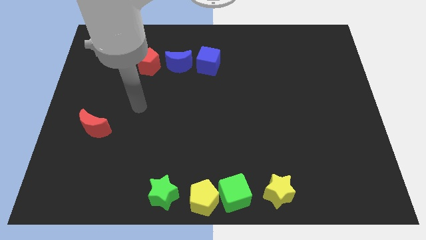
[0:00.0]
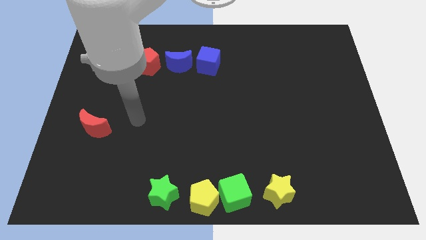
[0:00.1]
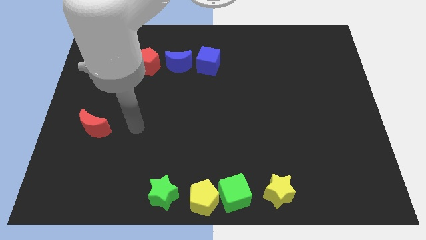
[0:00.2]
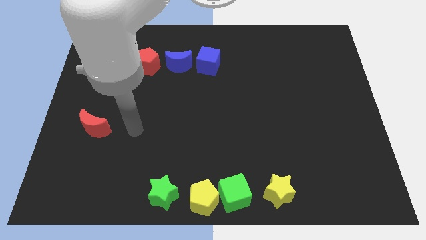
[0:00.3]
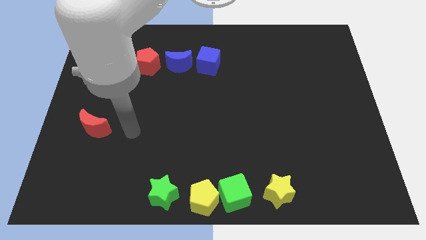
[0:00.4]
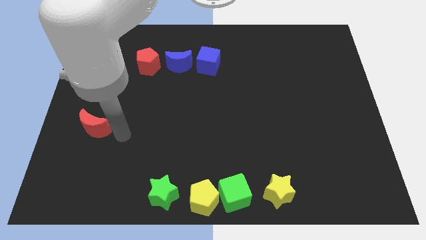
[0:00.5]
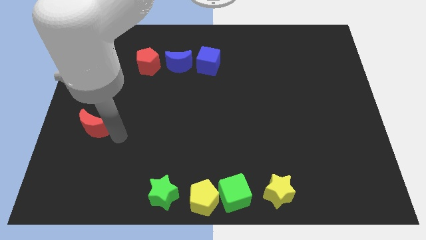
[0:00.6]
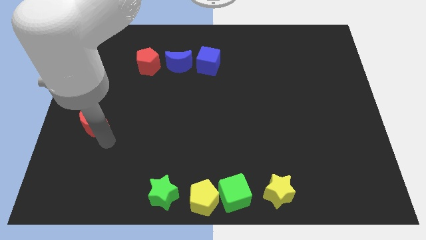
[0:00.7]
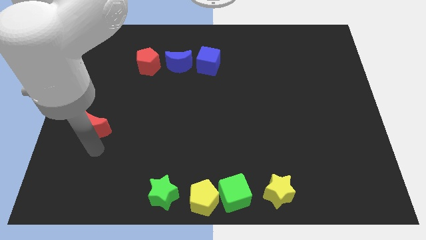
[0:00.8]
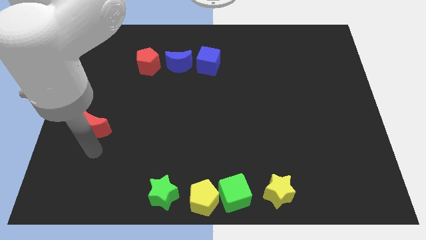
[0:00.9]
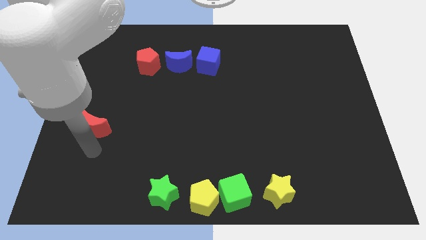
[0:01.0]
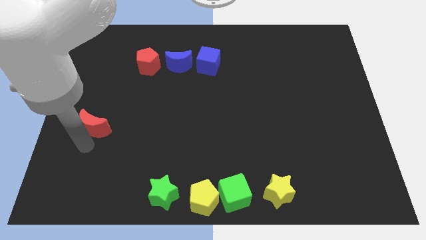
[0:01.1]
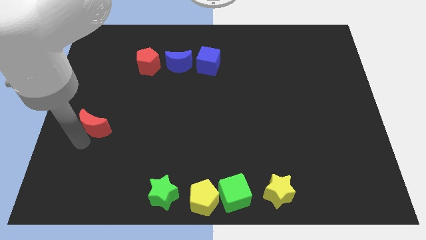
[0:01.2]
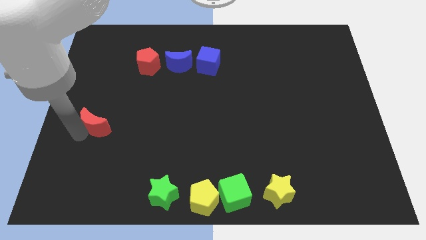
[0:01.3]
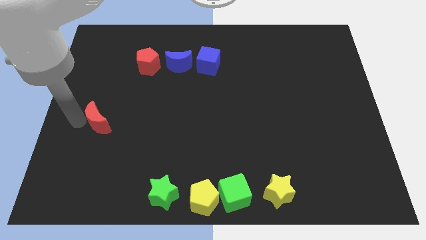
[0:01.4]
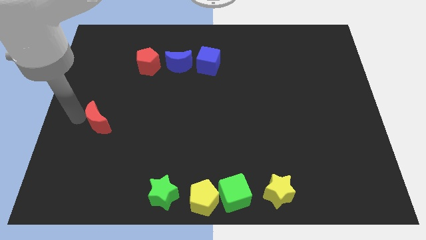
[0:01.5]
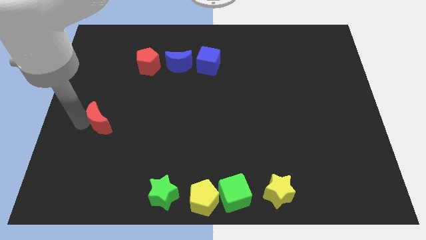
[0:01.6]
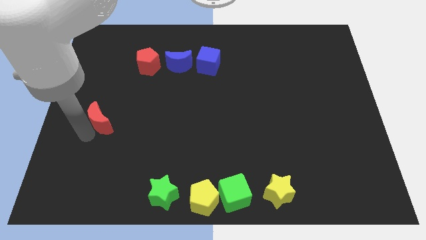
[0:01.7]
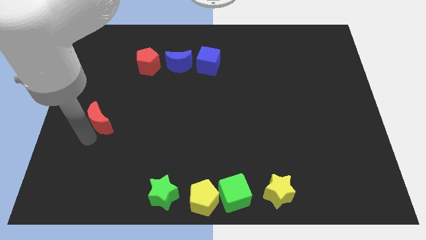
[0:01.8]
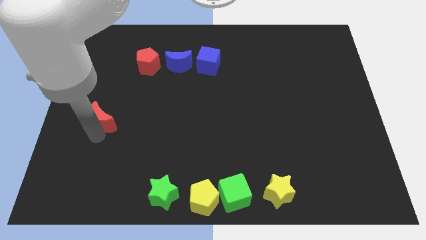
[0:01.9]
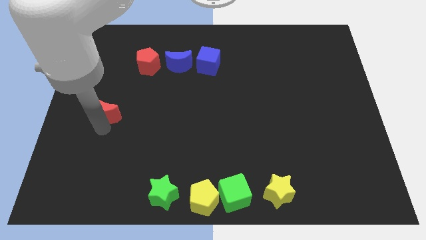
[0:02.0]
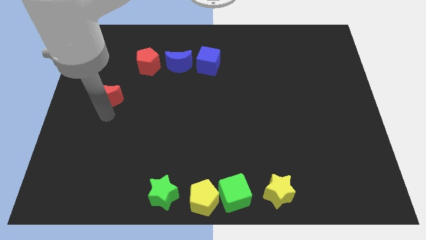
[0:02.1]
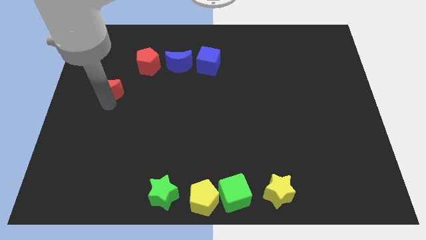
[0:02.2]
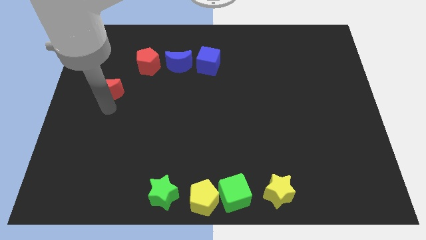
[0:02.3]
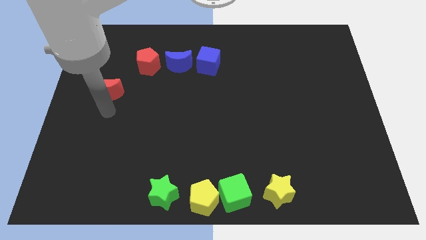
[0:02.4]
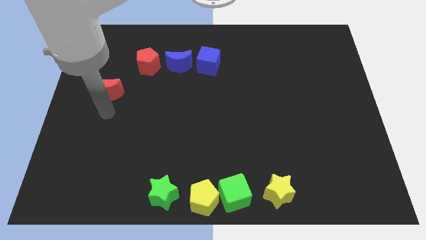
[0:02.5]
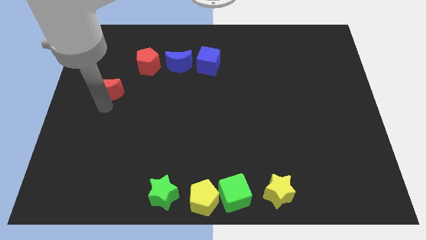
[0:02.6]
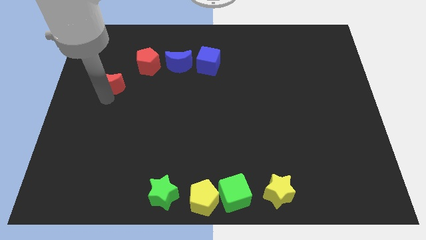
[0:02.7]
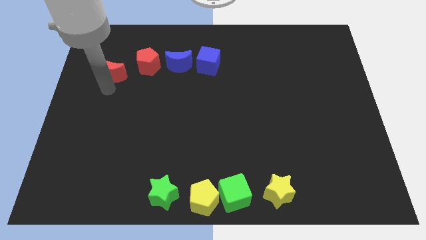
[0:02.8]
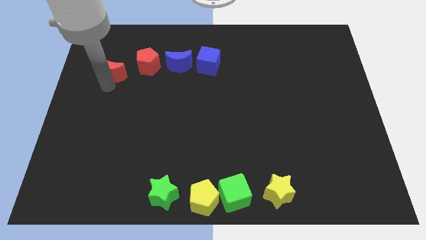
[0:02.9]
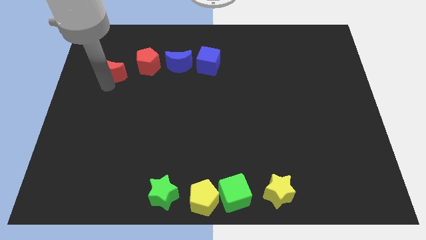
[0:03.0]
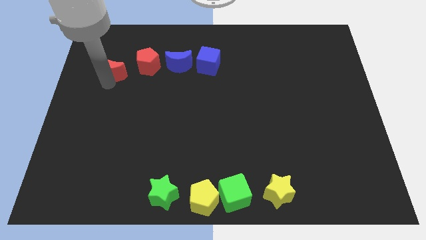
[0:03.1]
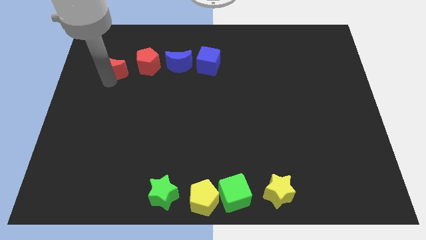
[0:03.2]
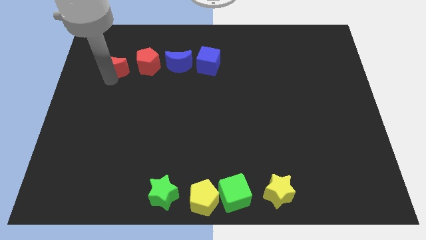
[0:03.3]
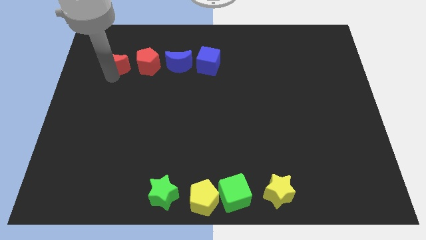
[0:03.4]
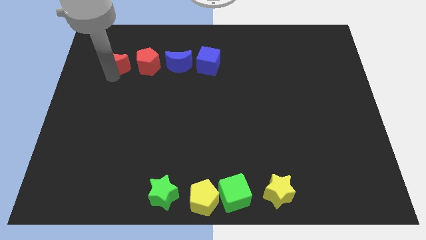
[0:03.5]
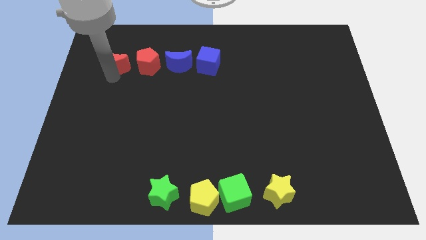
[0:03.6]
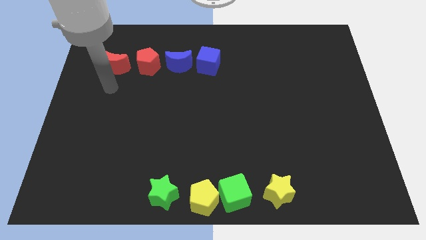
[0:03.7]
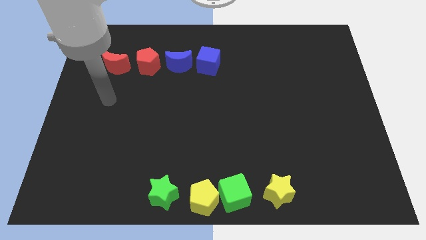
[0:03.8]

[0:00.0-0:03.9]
push the red crescent left to the red pentagon

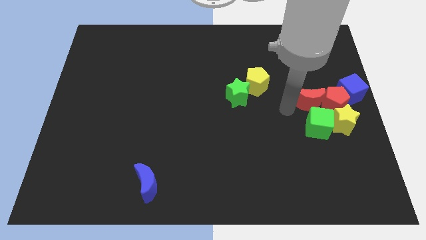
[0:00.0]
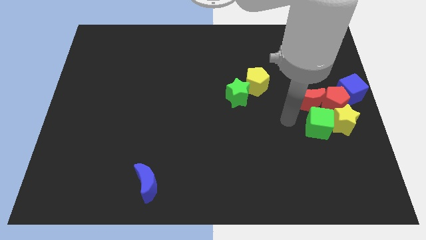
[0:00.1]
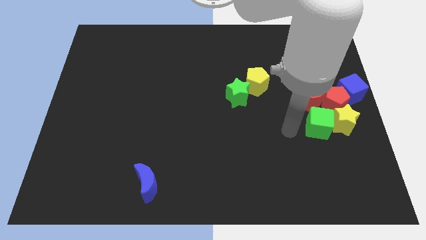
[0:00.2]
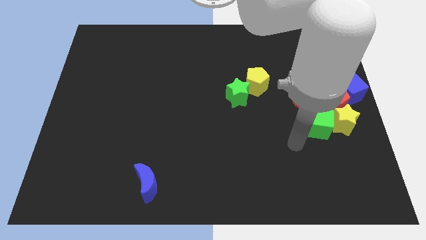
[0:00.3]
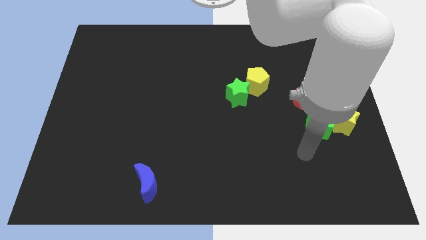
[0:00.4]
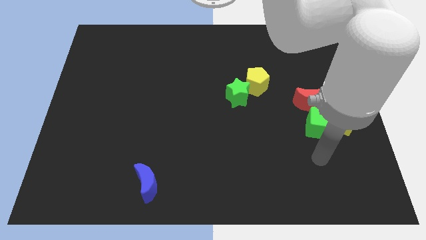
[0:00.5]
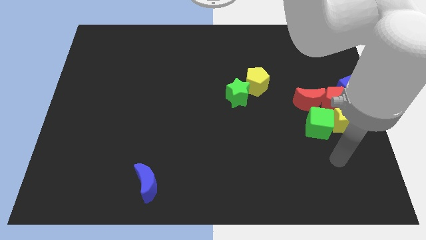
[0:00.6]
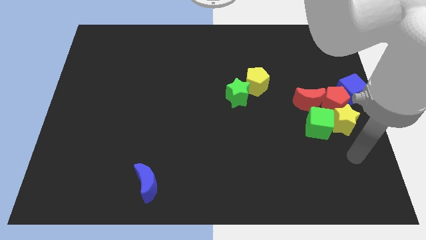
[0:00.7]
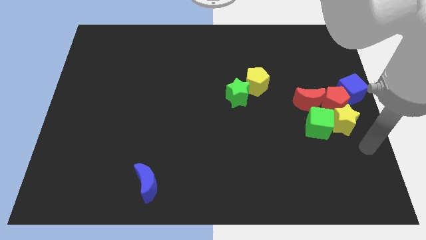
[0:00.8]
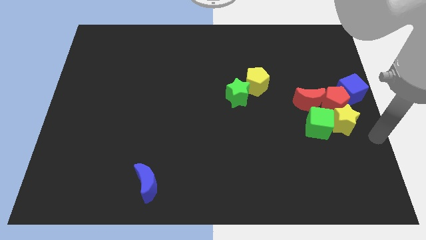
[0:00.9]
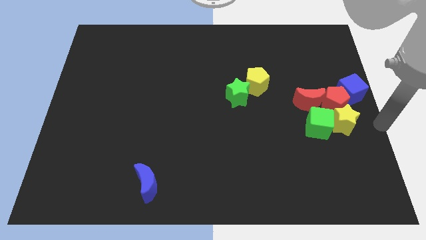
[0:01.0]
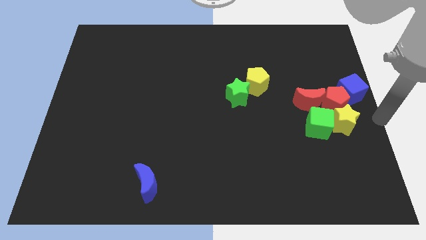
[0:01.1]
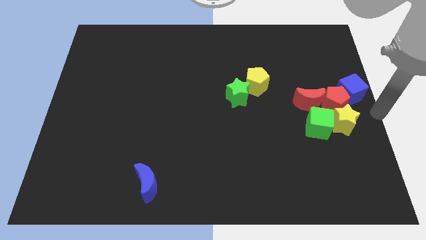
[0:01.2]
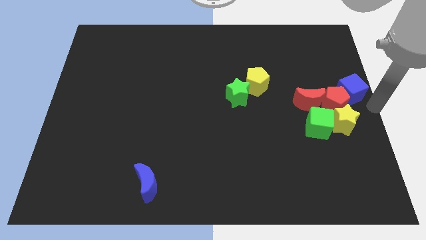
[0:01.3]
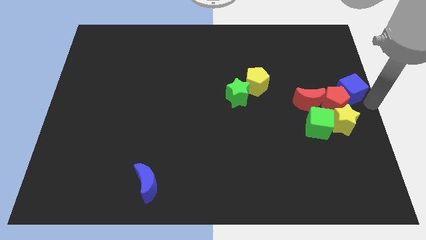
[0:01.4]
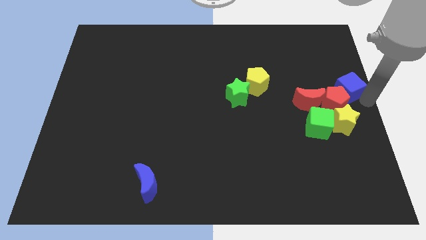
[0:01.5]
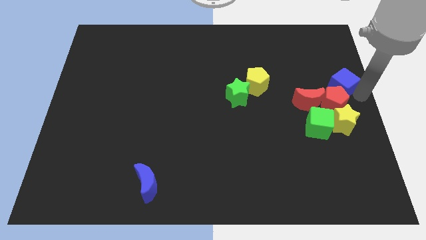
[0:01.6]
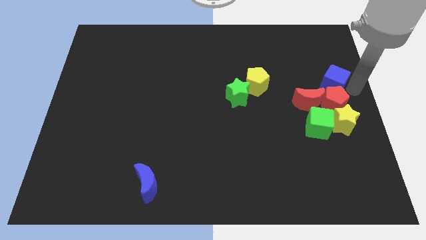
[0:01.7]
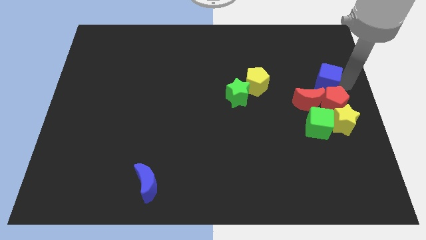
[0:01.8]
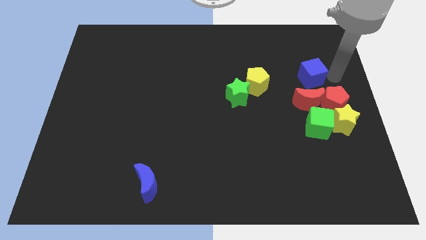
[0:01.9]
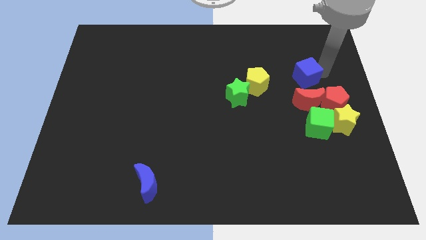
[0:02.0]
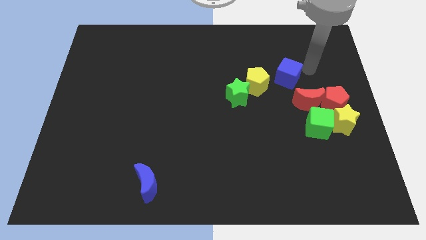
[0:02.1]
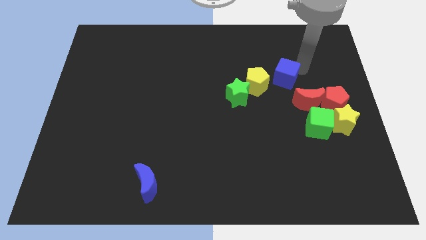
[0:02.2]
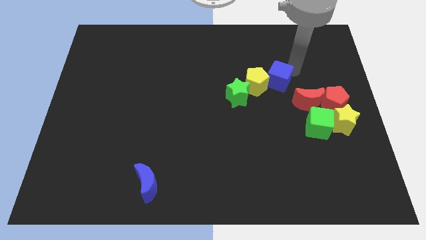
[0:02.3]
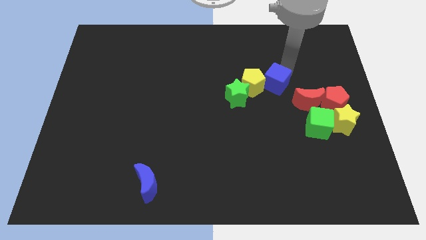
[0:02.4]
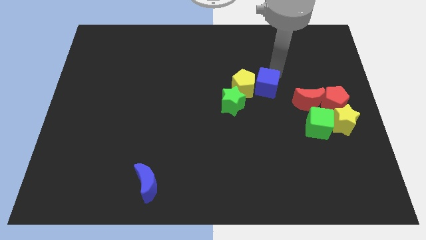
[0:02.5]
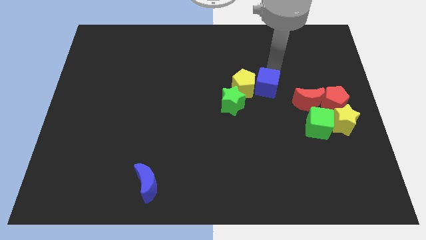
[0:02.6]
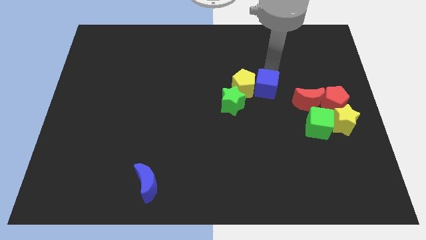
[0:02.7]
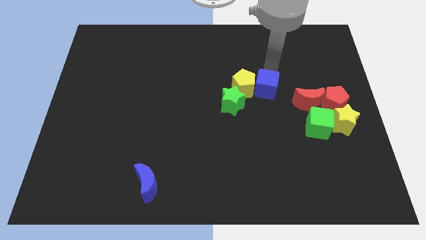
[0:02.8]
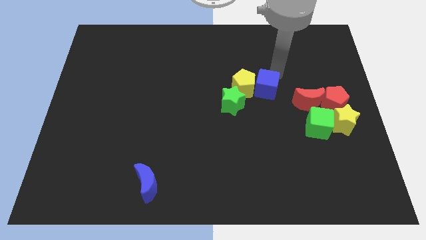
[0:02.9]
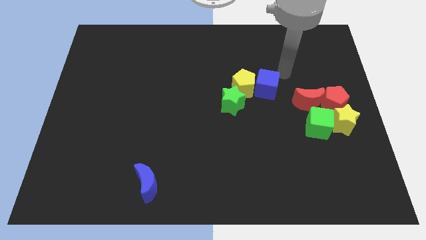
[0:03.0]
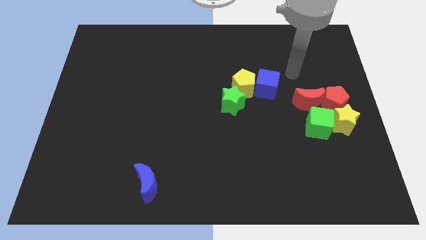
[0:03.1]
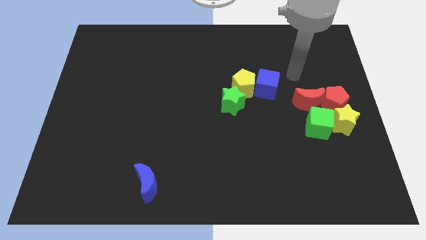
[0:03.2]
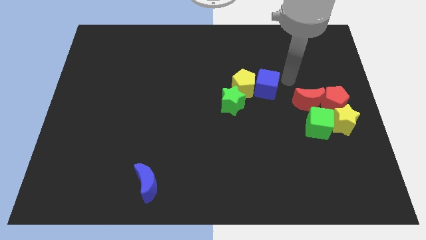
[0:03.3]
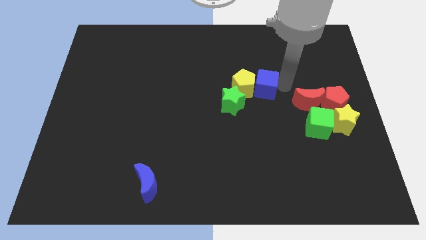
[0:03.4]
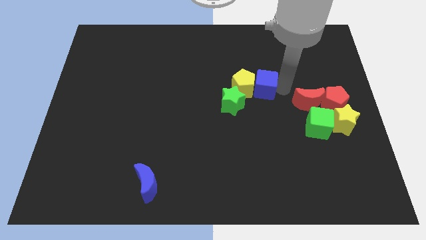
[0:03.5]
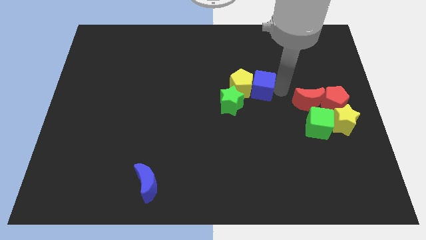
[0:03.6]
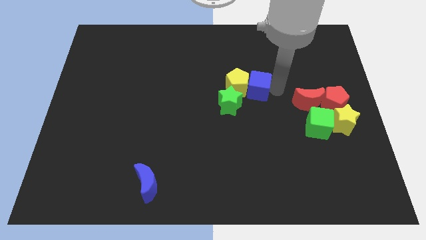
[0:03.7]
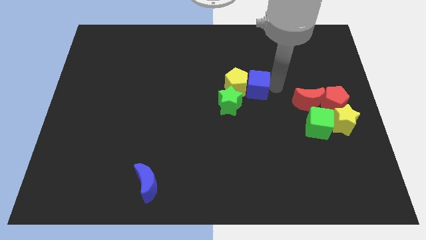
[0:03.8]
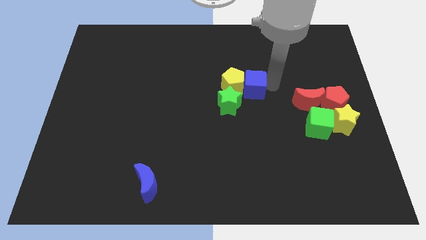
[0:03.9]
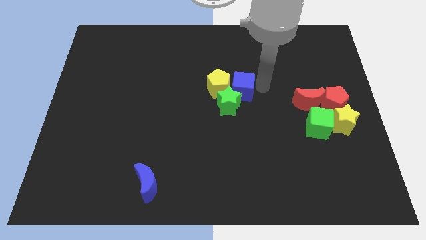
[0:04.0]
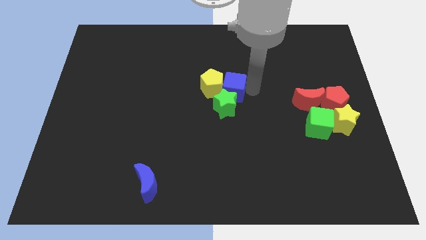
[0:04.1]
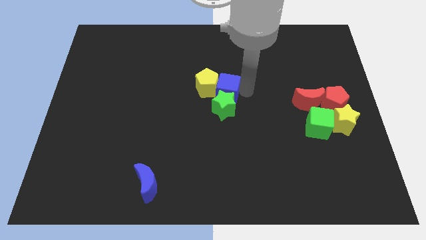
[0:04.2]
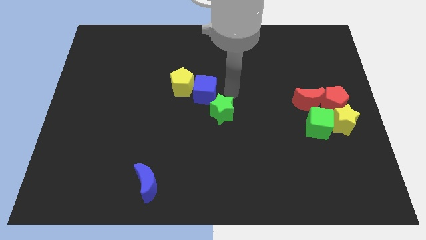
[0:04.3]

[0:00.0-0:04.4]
move the blue cube to the right of the yellow pentagon

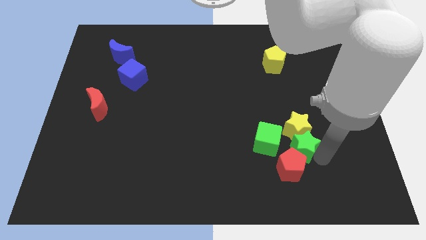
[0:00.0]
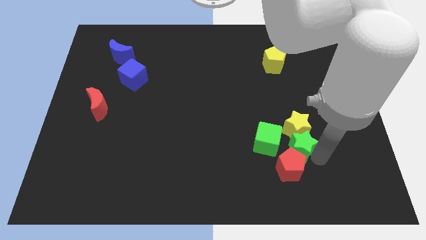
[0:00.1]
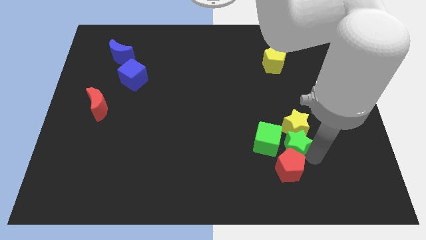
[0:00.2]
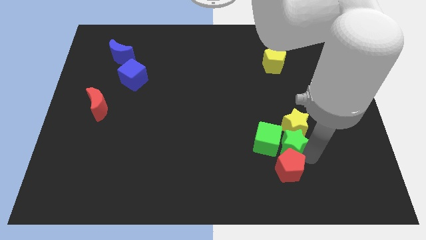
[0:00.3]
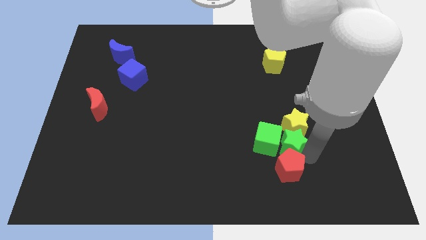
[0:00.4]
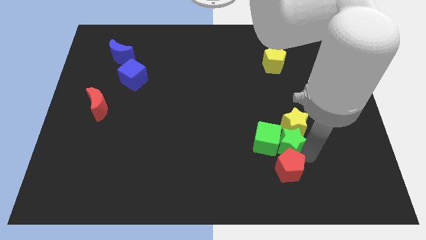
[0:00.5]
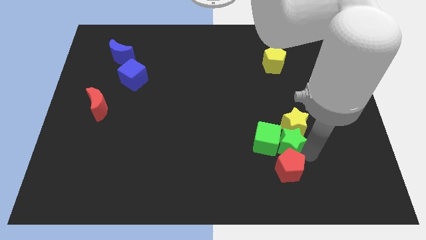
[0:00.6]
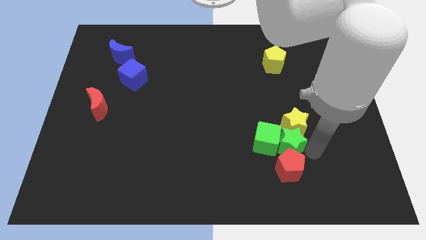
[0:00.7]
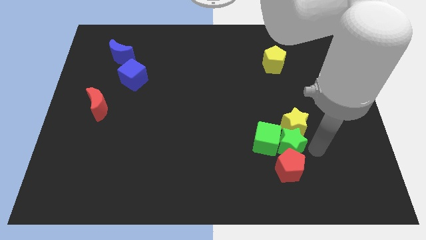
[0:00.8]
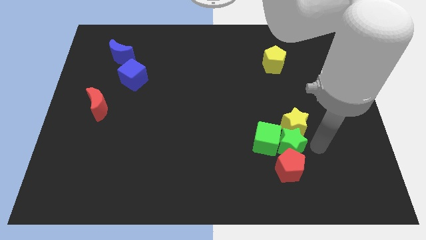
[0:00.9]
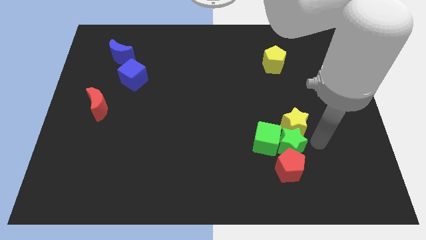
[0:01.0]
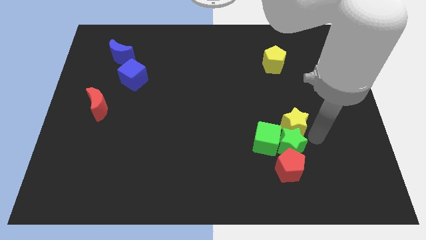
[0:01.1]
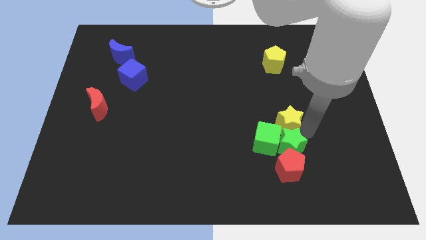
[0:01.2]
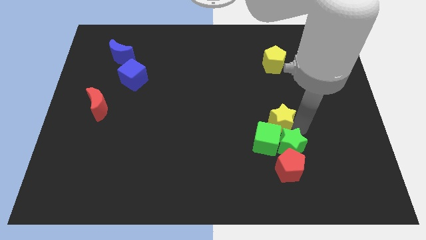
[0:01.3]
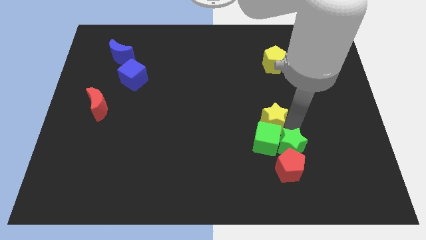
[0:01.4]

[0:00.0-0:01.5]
push green star into the green cube at bottom right of board
